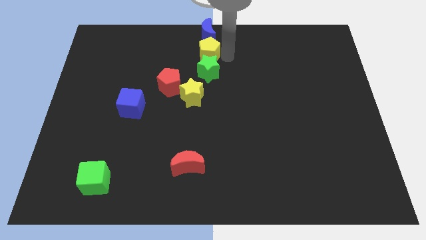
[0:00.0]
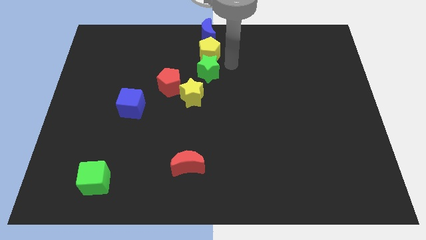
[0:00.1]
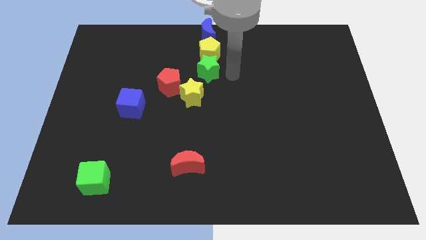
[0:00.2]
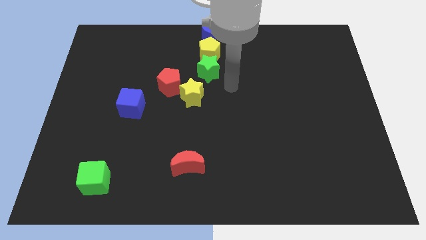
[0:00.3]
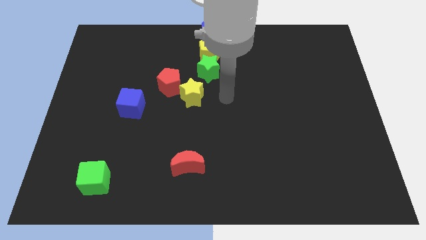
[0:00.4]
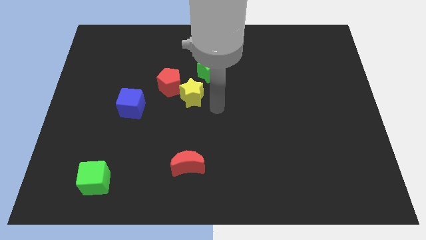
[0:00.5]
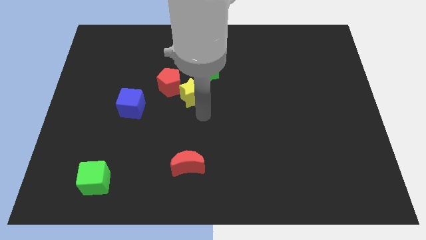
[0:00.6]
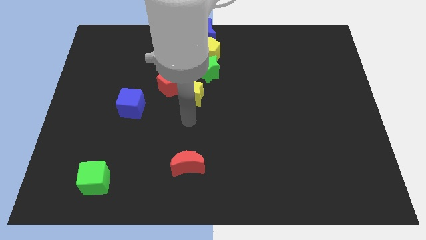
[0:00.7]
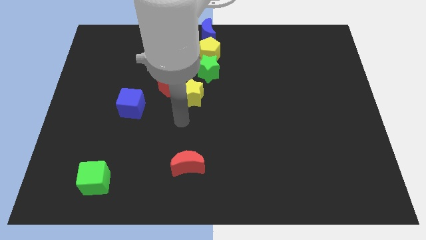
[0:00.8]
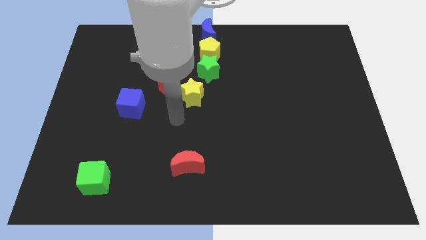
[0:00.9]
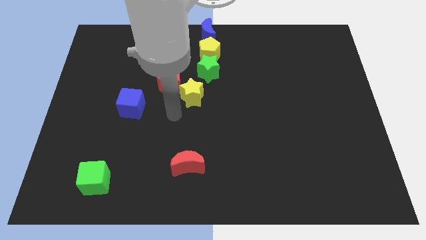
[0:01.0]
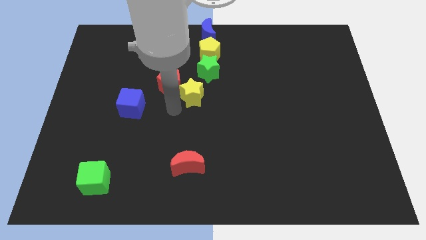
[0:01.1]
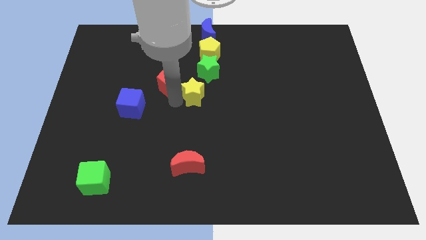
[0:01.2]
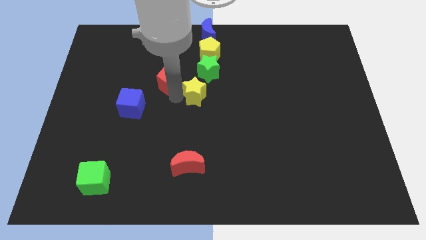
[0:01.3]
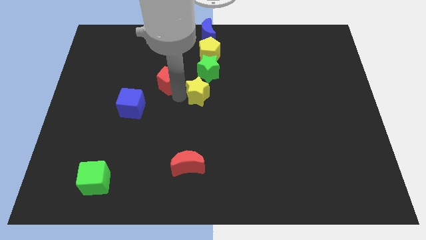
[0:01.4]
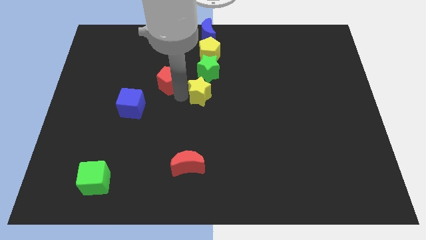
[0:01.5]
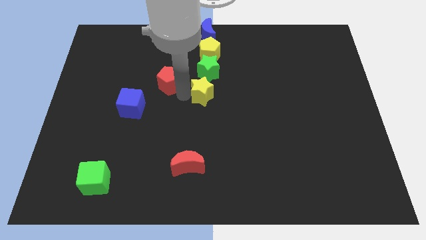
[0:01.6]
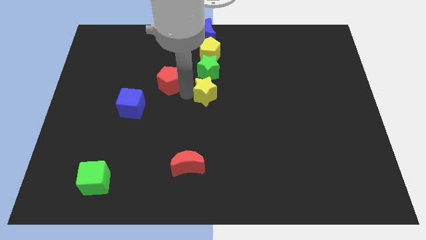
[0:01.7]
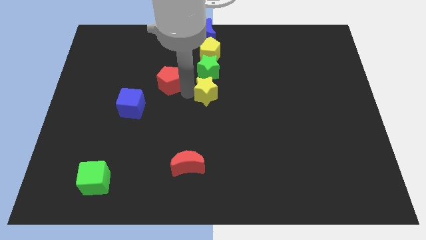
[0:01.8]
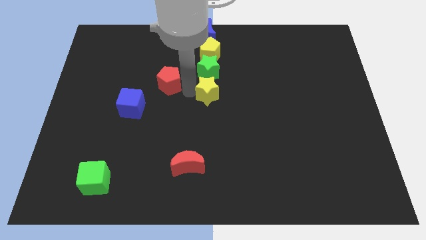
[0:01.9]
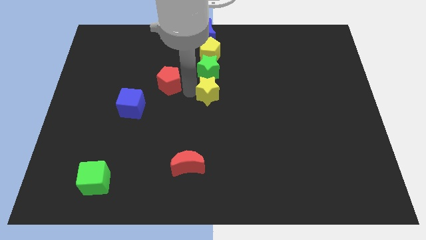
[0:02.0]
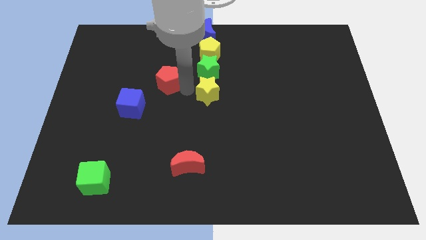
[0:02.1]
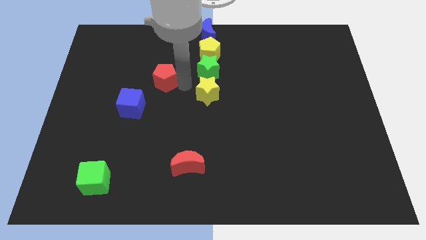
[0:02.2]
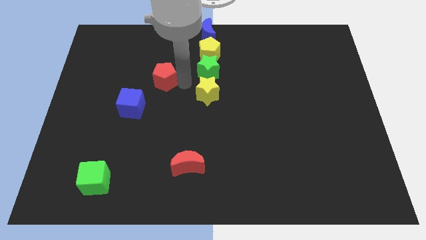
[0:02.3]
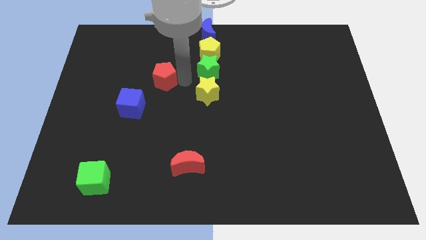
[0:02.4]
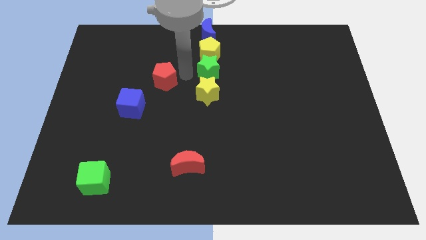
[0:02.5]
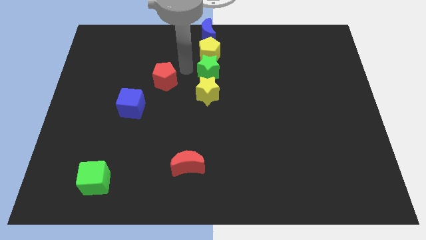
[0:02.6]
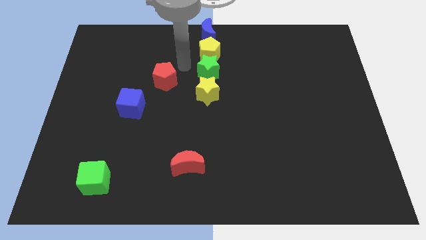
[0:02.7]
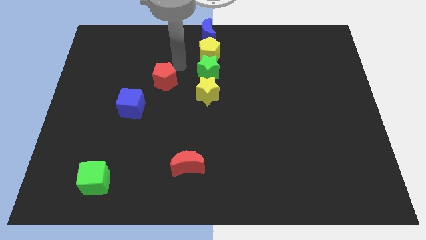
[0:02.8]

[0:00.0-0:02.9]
place the yellow star to the bottom of the green star

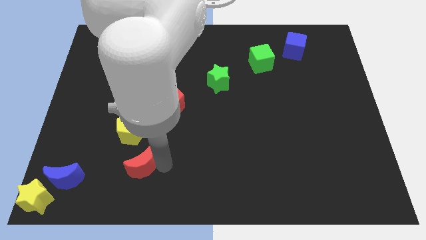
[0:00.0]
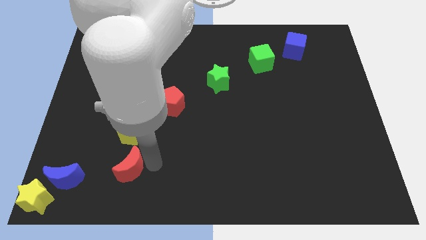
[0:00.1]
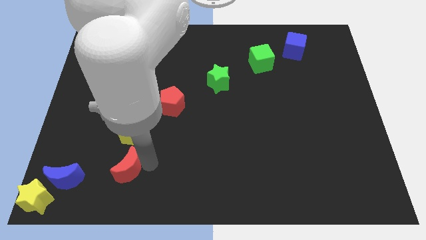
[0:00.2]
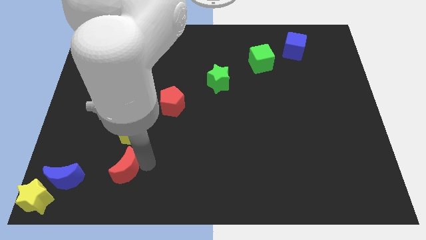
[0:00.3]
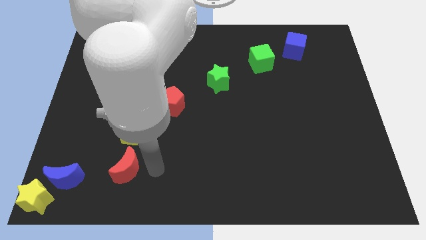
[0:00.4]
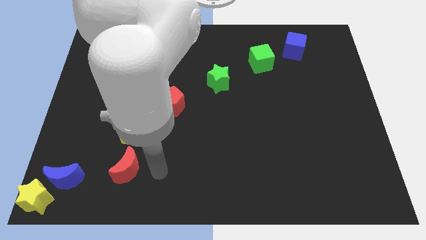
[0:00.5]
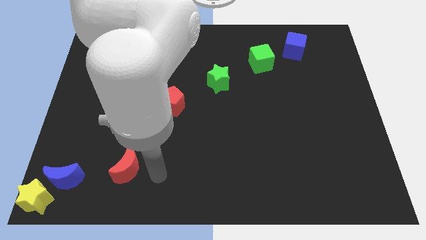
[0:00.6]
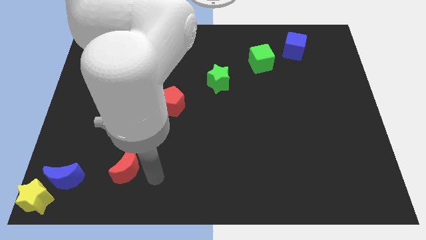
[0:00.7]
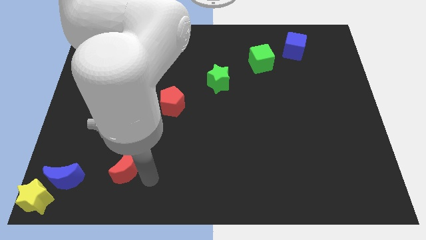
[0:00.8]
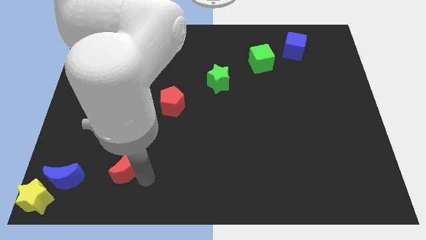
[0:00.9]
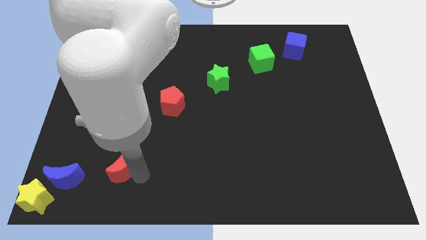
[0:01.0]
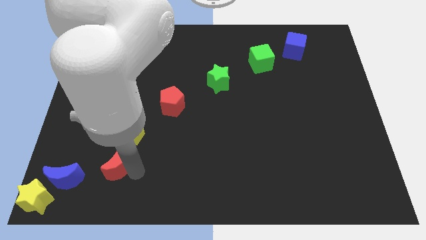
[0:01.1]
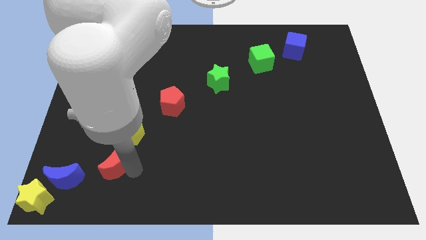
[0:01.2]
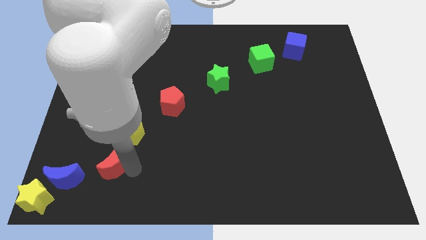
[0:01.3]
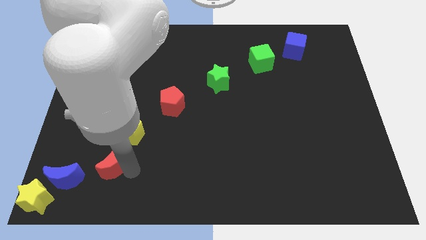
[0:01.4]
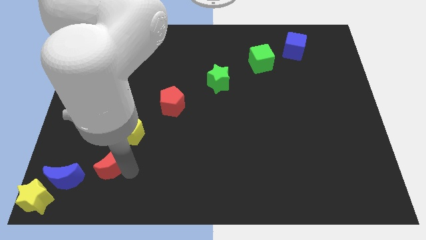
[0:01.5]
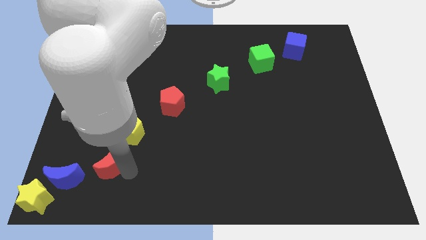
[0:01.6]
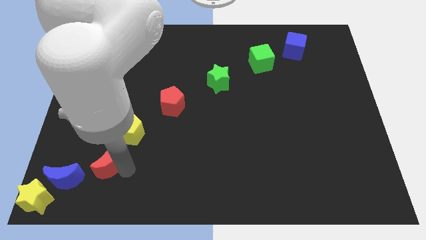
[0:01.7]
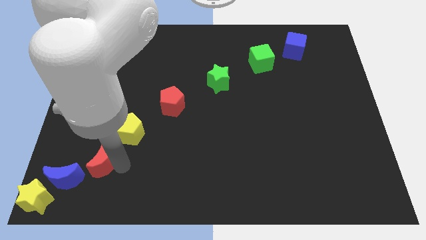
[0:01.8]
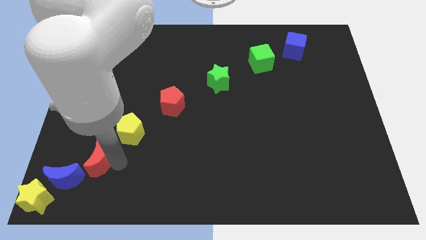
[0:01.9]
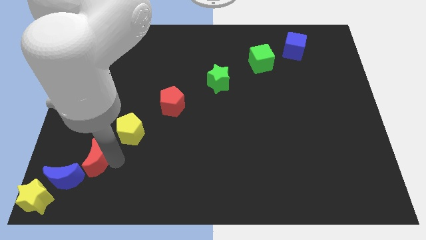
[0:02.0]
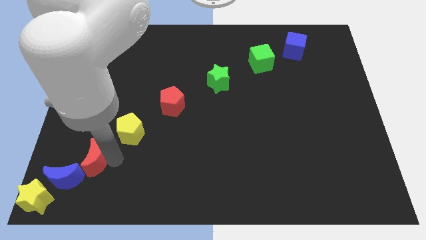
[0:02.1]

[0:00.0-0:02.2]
move red moon close to blue moon

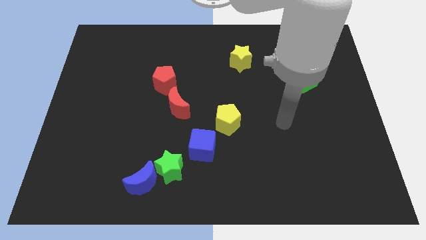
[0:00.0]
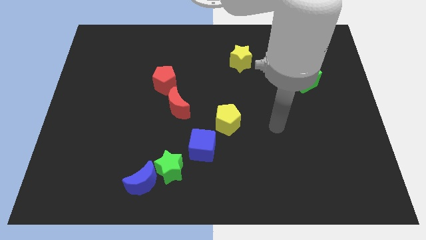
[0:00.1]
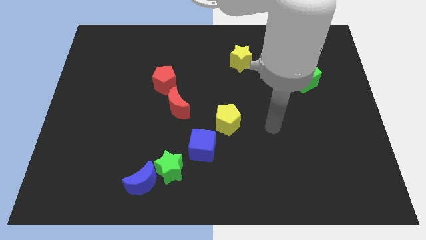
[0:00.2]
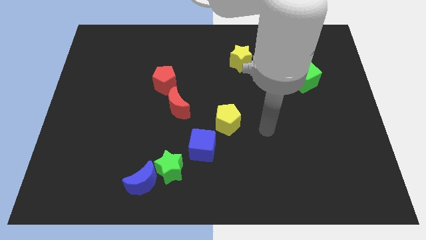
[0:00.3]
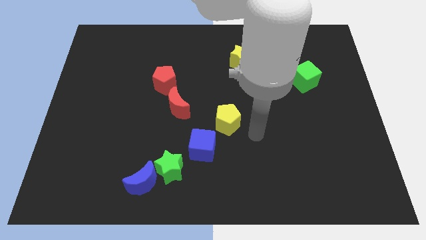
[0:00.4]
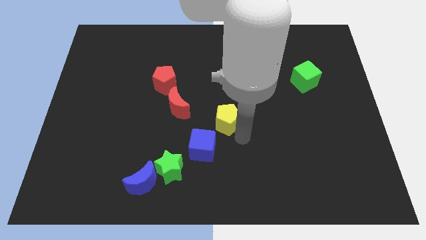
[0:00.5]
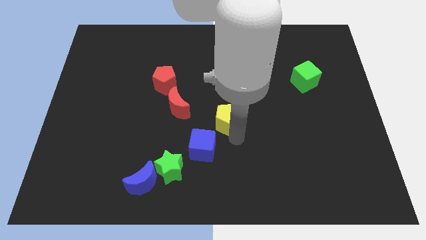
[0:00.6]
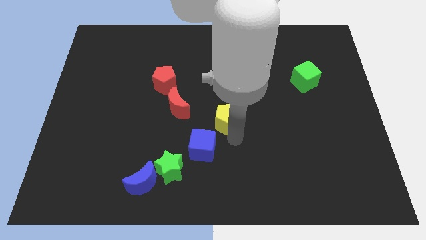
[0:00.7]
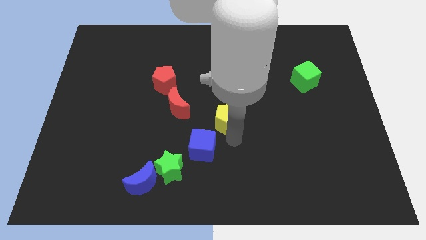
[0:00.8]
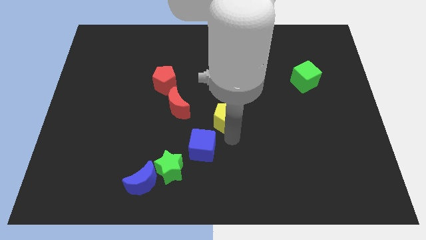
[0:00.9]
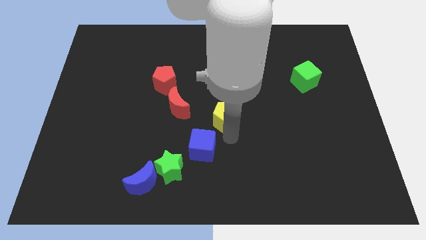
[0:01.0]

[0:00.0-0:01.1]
touch the bottom of the yellow pentagon

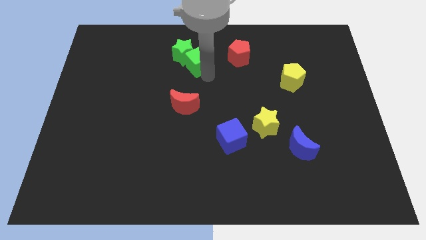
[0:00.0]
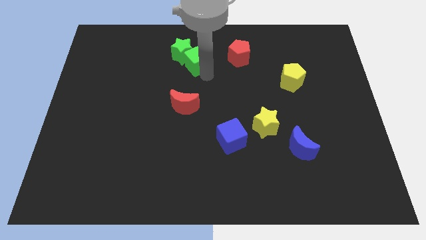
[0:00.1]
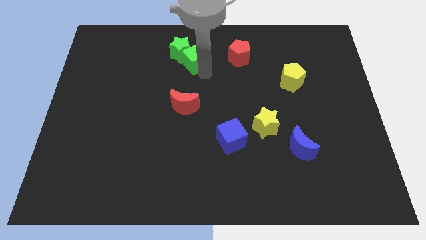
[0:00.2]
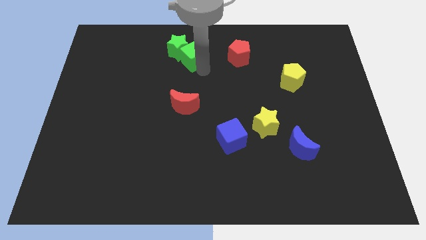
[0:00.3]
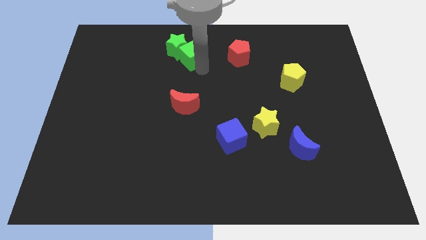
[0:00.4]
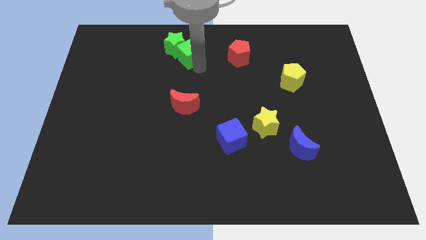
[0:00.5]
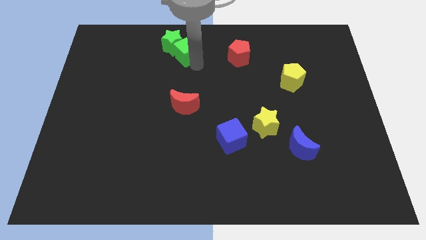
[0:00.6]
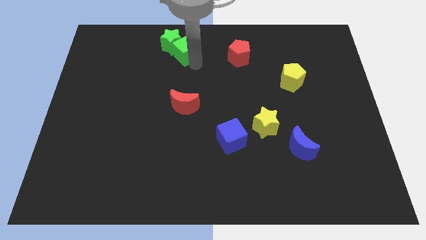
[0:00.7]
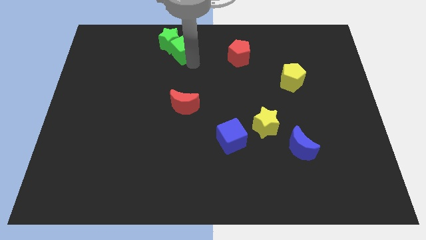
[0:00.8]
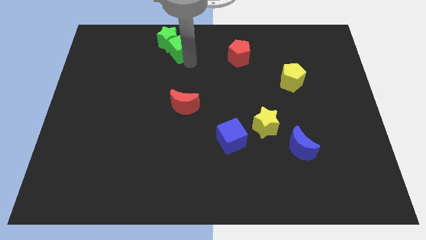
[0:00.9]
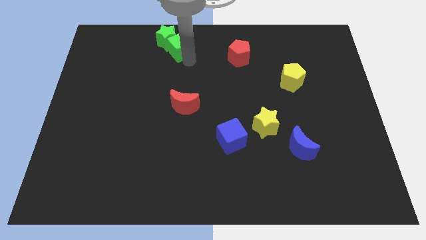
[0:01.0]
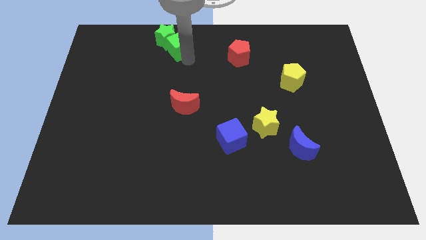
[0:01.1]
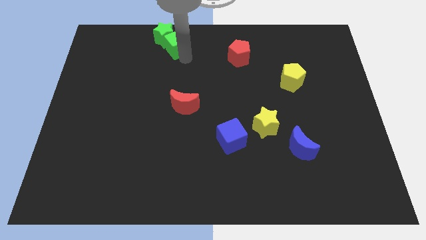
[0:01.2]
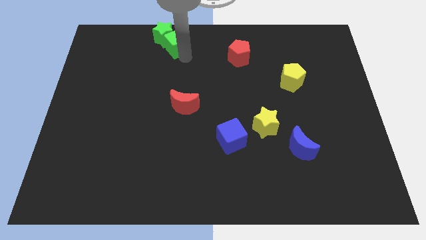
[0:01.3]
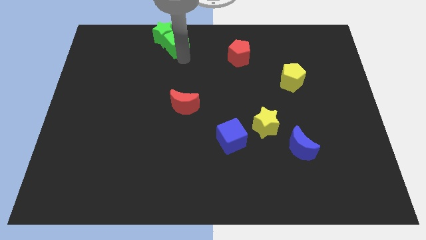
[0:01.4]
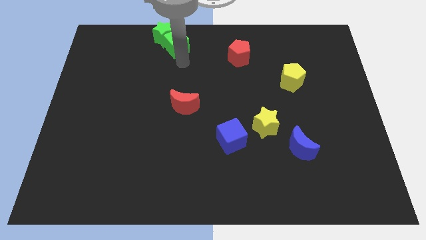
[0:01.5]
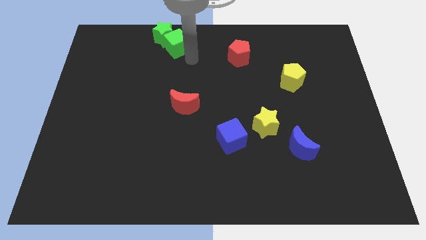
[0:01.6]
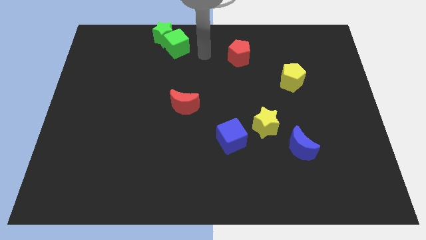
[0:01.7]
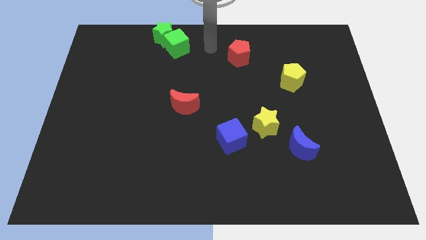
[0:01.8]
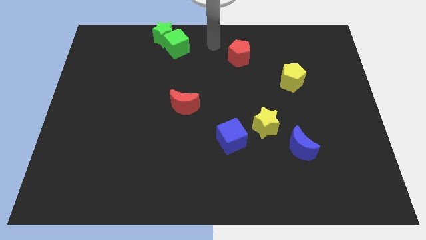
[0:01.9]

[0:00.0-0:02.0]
move the green blocks diagonal to the yellow star

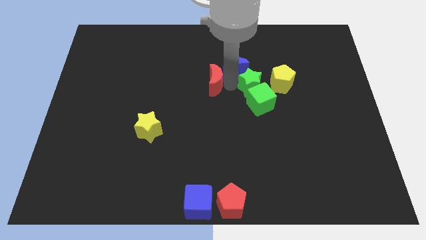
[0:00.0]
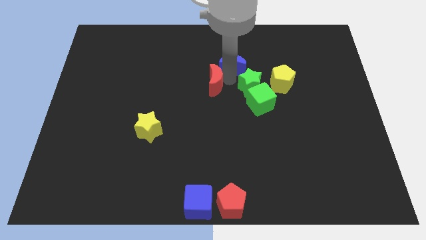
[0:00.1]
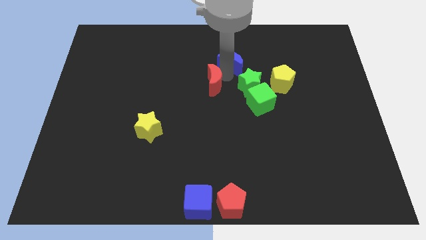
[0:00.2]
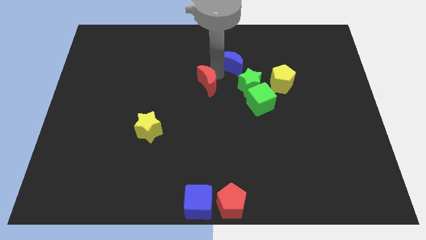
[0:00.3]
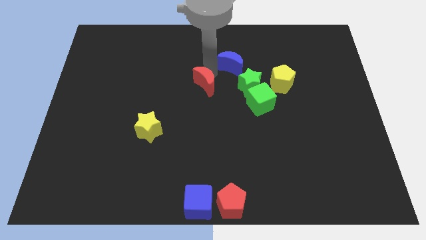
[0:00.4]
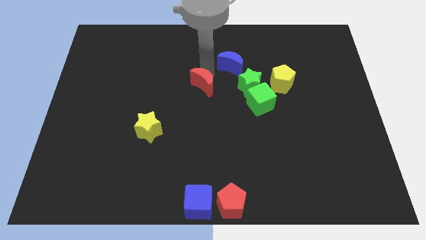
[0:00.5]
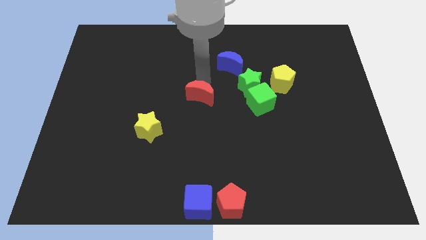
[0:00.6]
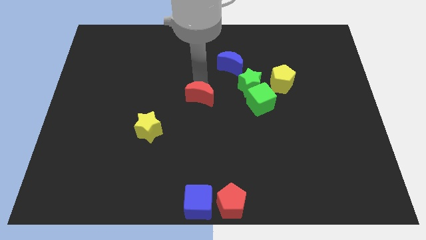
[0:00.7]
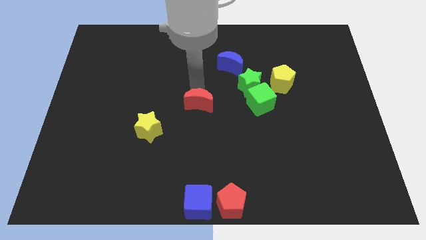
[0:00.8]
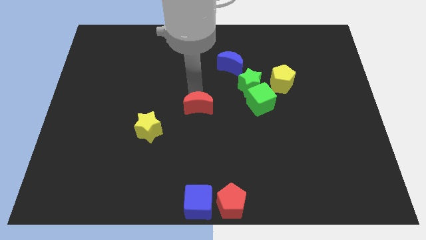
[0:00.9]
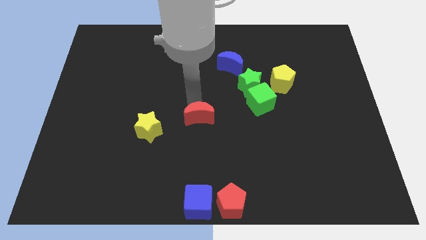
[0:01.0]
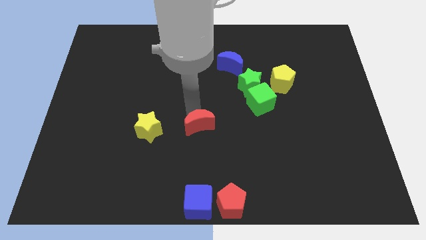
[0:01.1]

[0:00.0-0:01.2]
push the red crescent to the right of the yellow star
